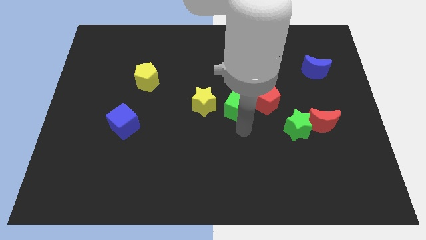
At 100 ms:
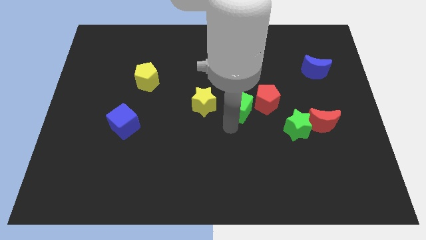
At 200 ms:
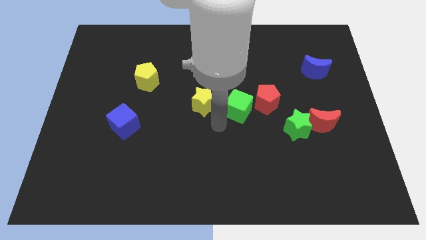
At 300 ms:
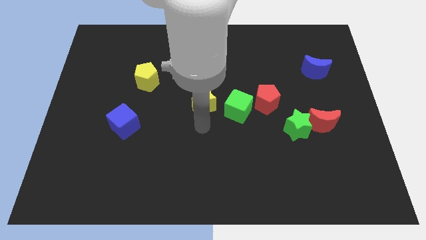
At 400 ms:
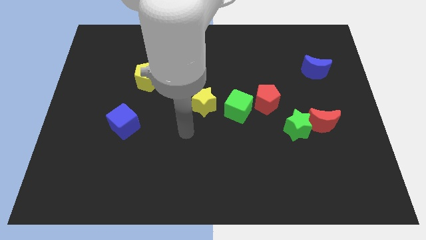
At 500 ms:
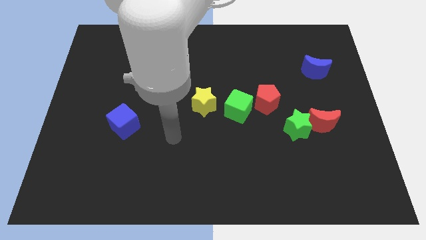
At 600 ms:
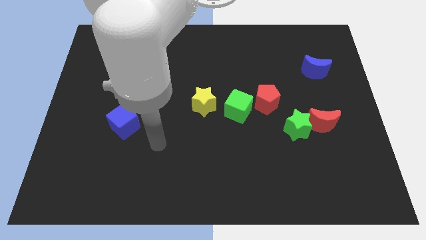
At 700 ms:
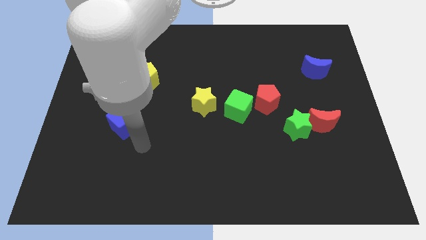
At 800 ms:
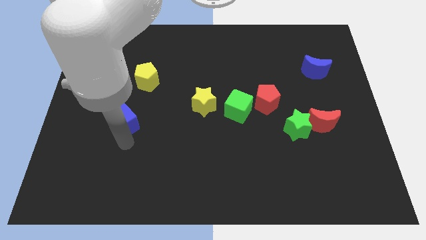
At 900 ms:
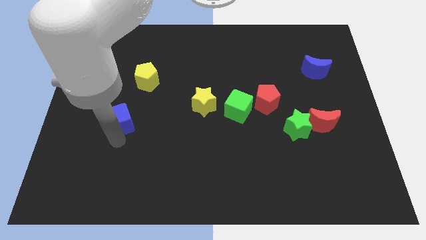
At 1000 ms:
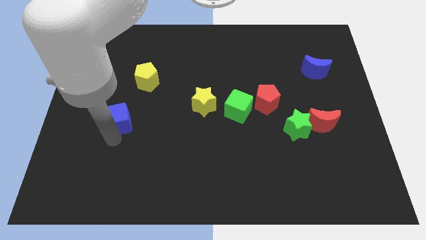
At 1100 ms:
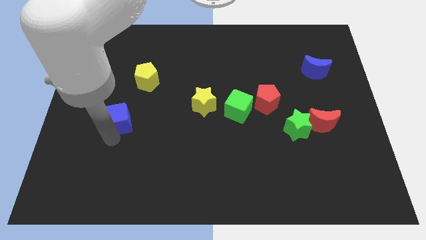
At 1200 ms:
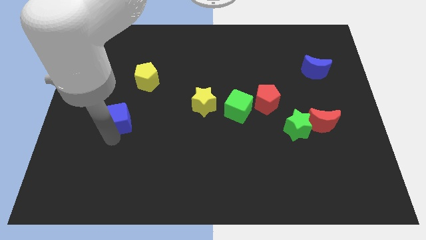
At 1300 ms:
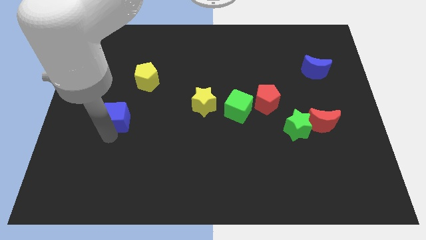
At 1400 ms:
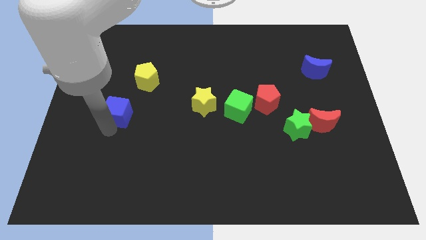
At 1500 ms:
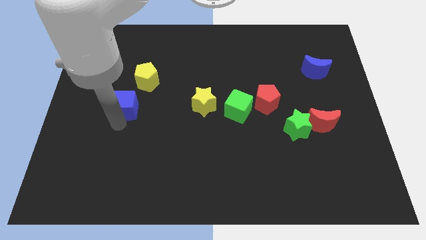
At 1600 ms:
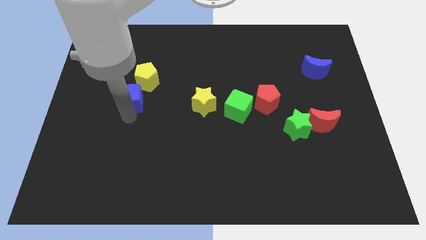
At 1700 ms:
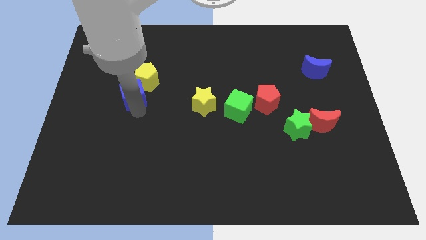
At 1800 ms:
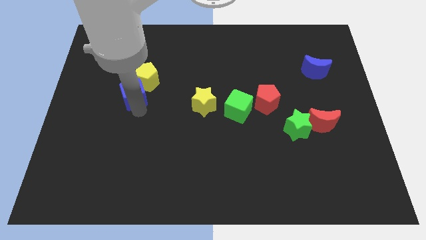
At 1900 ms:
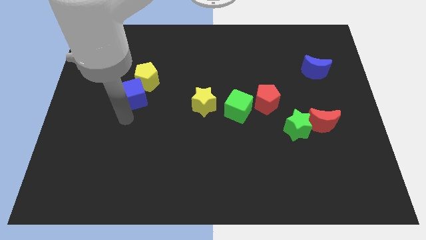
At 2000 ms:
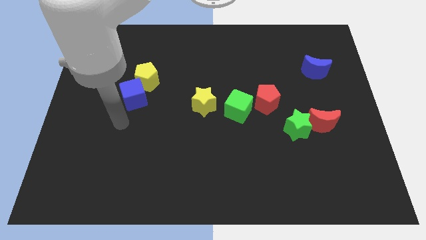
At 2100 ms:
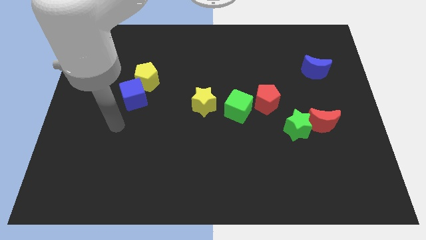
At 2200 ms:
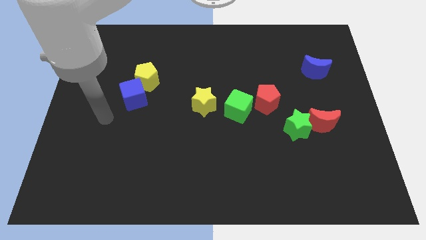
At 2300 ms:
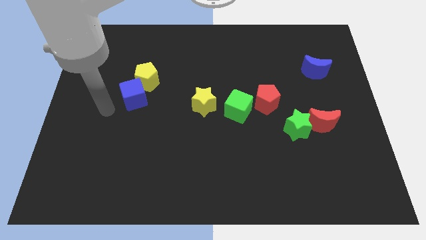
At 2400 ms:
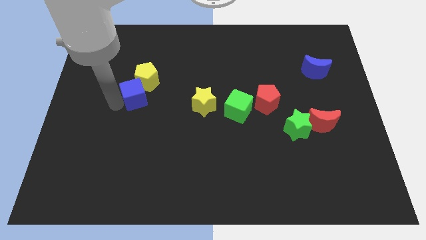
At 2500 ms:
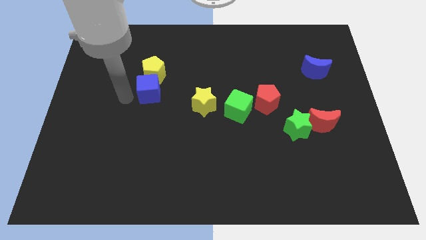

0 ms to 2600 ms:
push the blue cube into the yellow pentagon

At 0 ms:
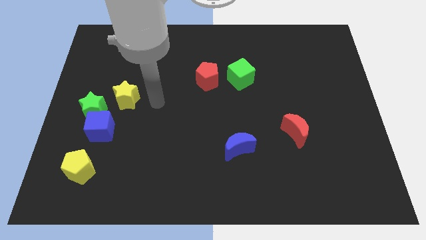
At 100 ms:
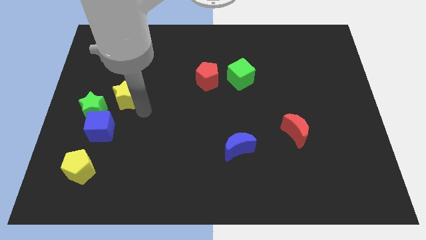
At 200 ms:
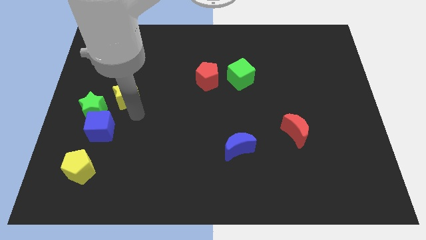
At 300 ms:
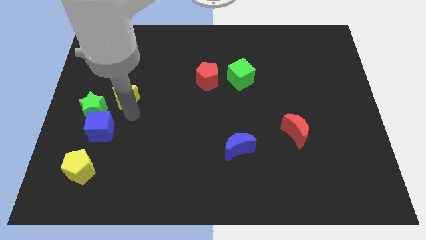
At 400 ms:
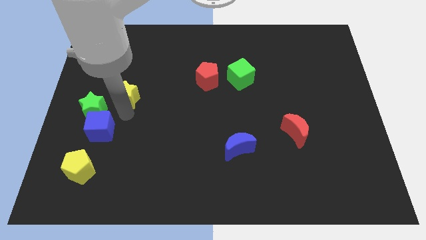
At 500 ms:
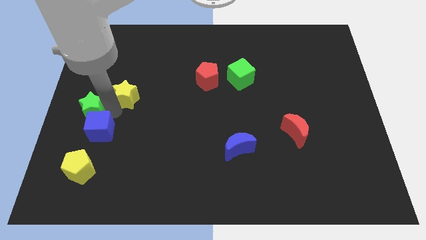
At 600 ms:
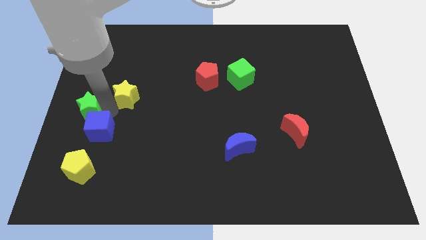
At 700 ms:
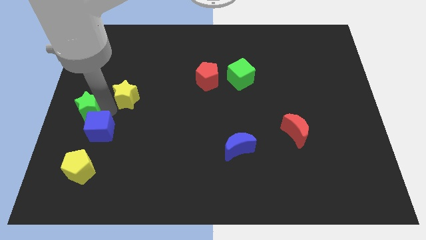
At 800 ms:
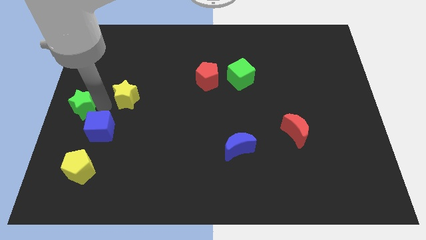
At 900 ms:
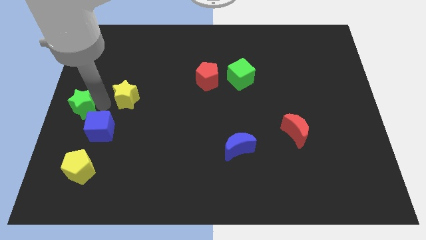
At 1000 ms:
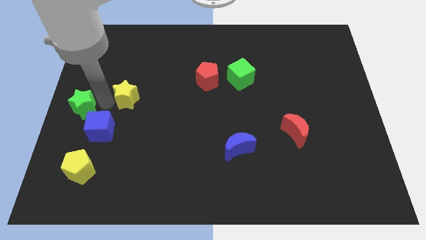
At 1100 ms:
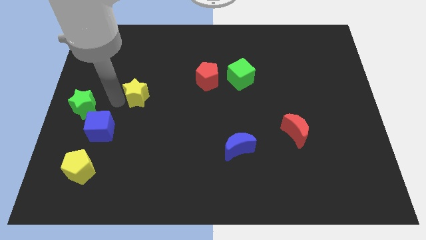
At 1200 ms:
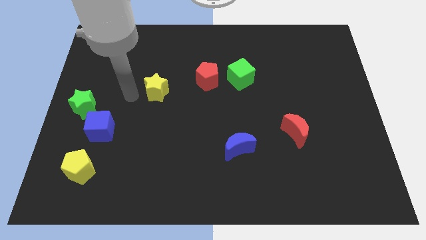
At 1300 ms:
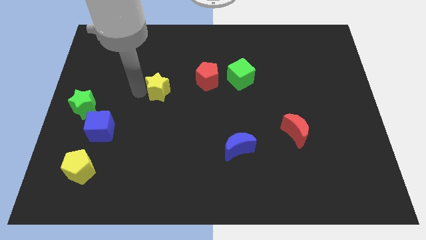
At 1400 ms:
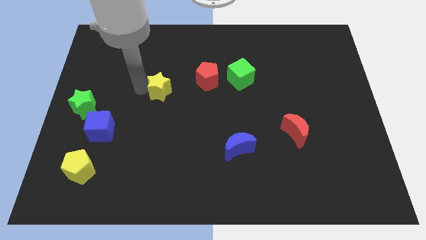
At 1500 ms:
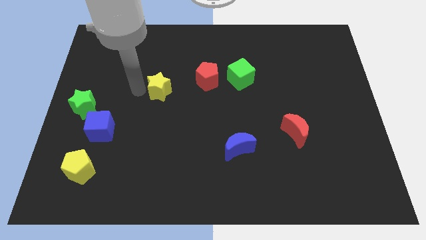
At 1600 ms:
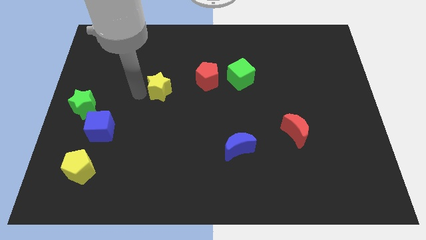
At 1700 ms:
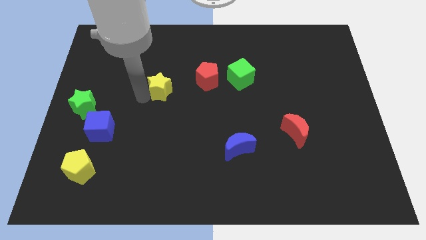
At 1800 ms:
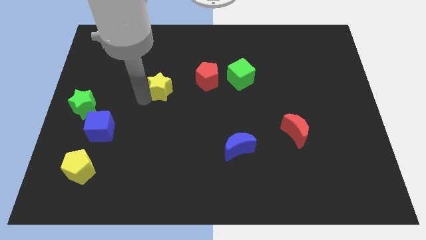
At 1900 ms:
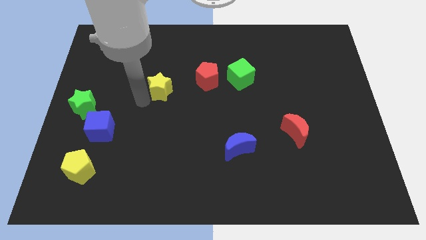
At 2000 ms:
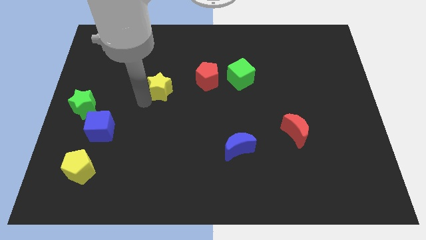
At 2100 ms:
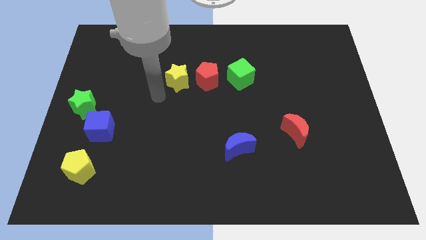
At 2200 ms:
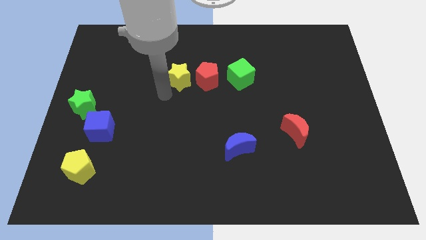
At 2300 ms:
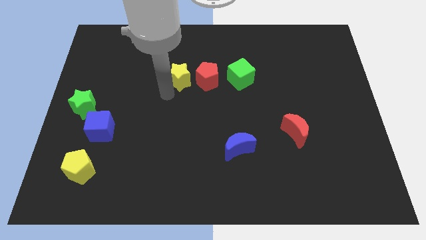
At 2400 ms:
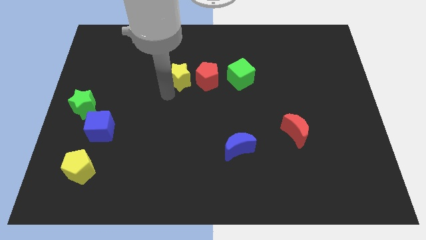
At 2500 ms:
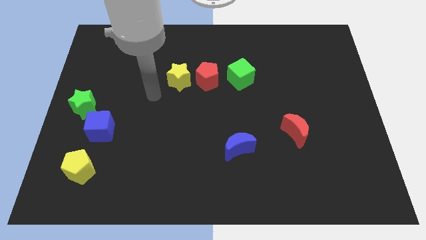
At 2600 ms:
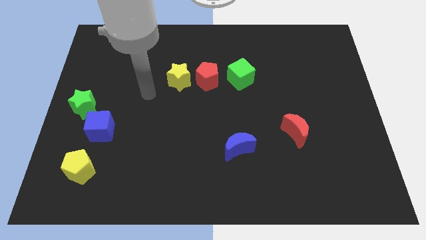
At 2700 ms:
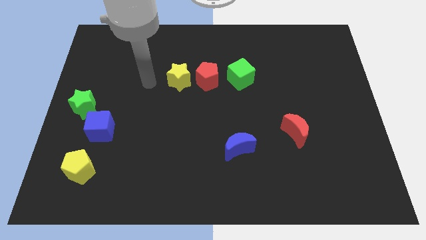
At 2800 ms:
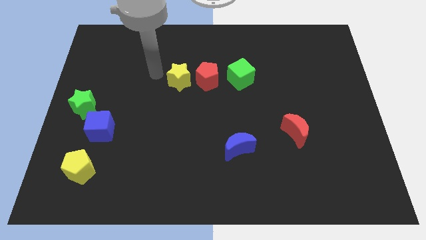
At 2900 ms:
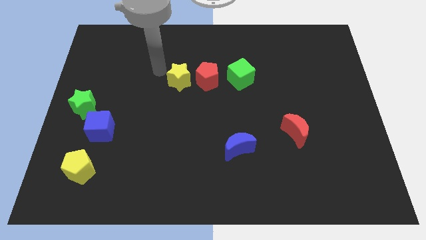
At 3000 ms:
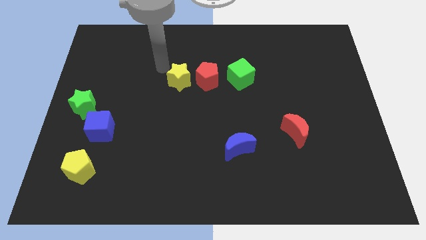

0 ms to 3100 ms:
separate the yellow star from the green star

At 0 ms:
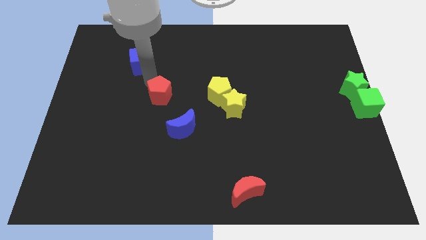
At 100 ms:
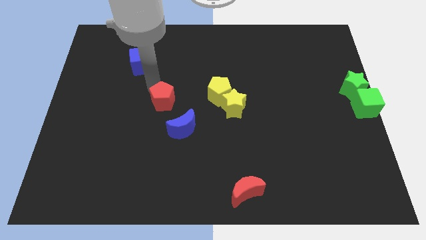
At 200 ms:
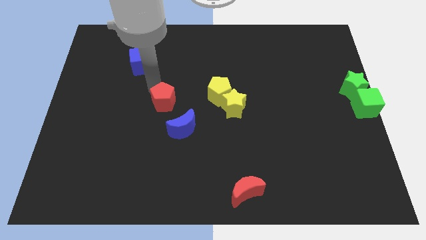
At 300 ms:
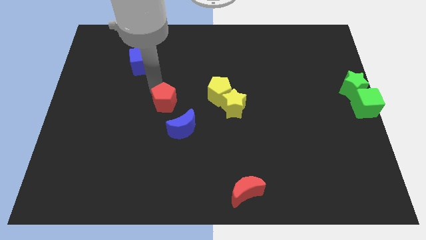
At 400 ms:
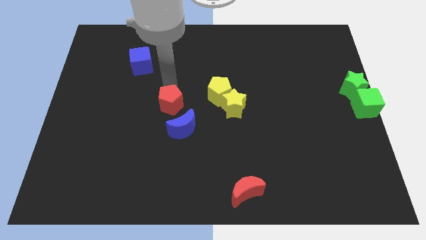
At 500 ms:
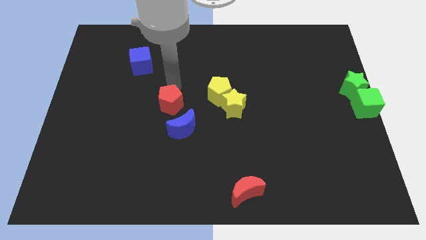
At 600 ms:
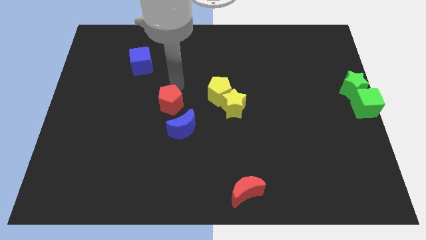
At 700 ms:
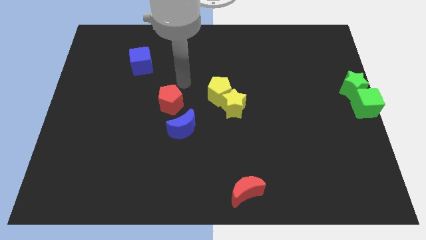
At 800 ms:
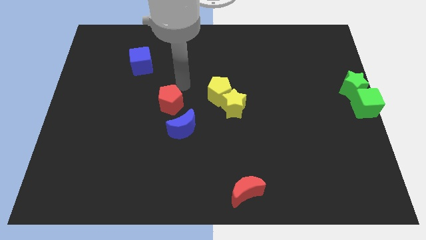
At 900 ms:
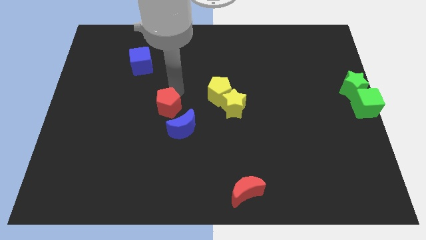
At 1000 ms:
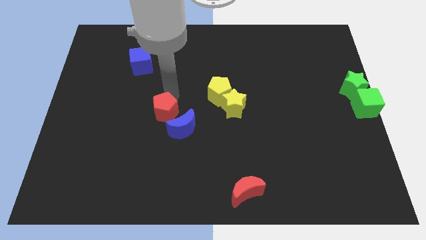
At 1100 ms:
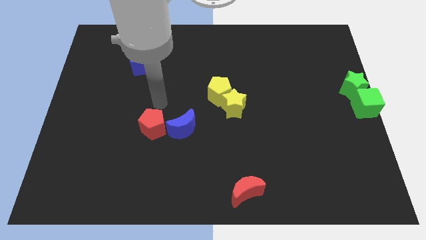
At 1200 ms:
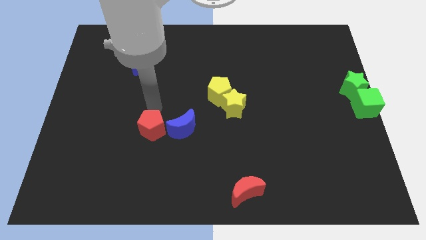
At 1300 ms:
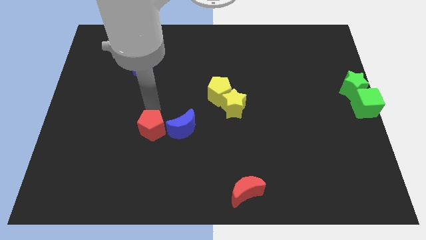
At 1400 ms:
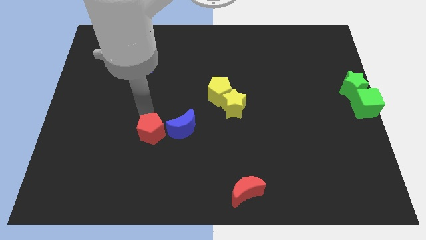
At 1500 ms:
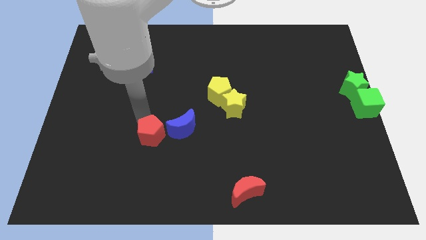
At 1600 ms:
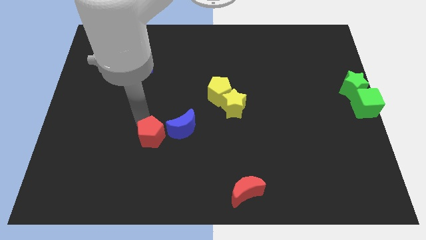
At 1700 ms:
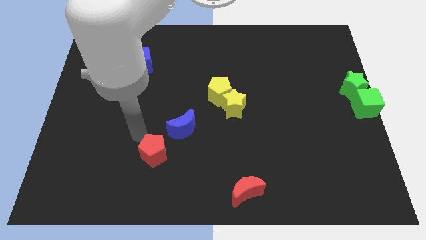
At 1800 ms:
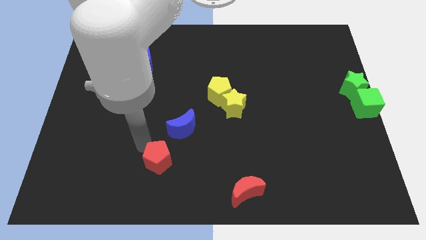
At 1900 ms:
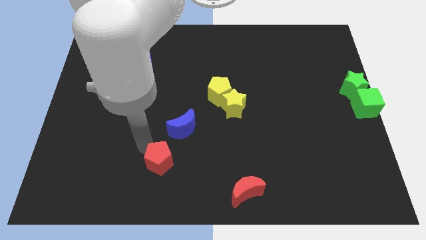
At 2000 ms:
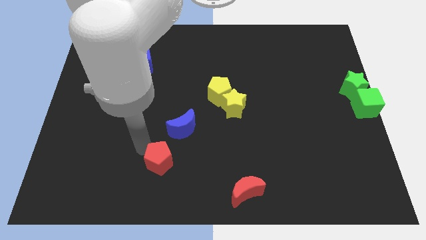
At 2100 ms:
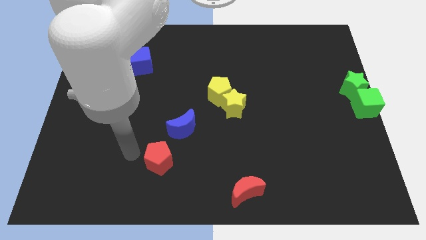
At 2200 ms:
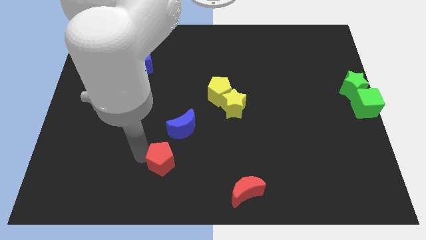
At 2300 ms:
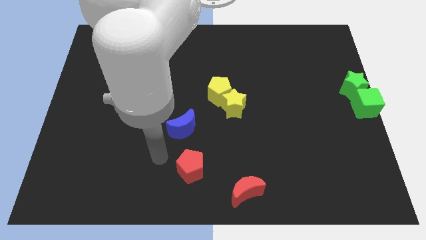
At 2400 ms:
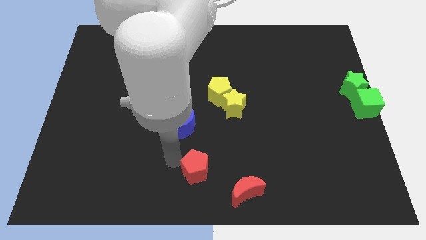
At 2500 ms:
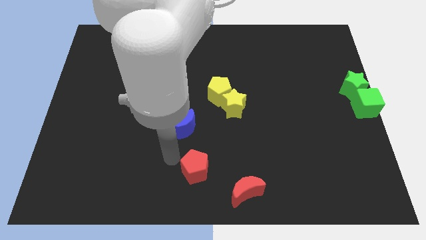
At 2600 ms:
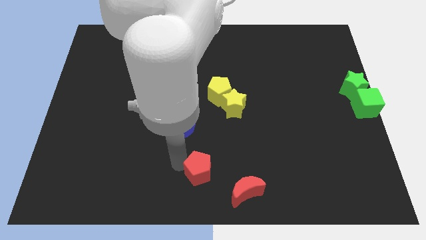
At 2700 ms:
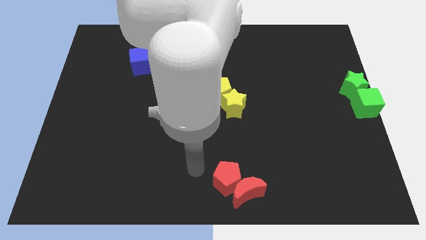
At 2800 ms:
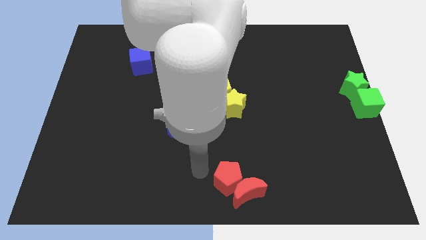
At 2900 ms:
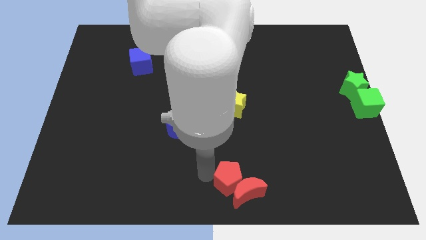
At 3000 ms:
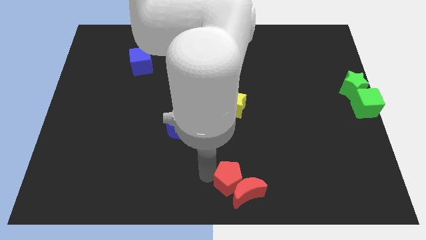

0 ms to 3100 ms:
push the red pentagon into the top left side of the red crescent

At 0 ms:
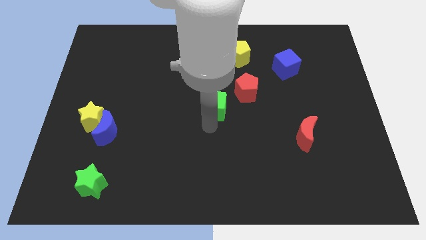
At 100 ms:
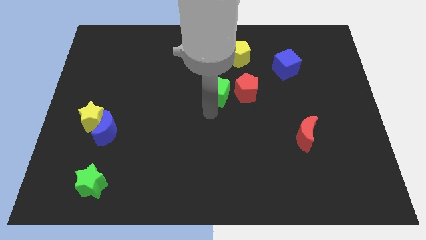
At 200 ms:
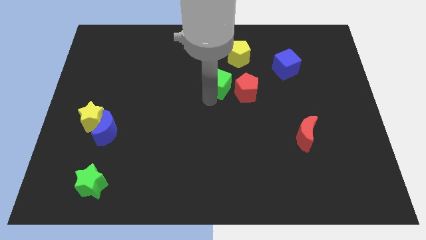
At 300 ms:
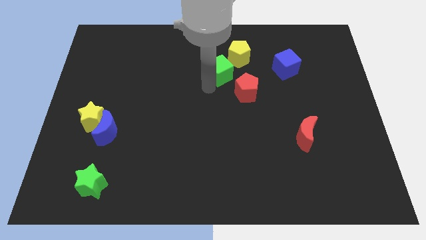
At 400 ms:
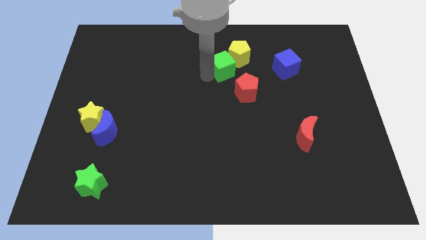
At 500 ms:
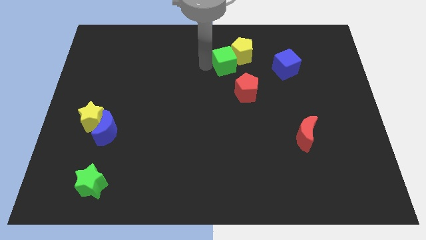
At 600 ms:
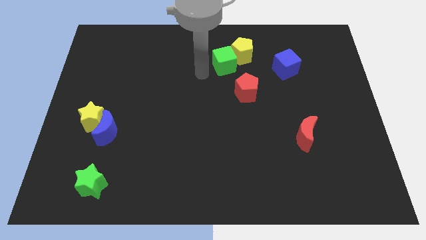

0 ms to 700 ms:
place the green cube to the left of the yellow pentagon
